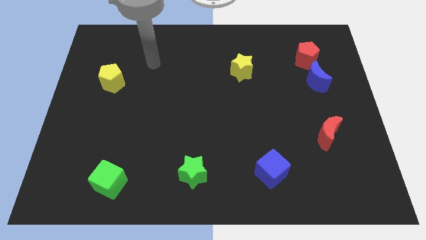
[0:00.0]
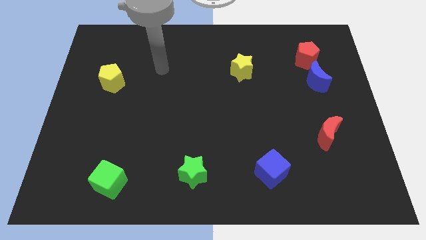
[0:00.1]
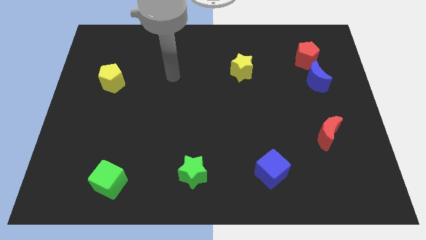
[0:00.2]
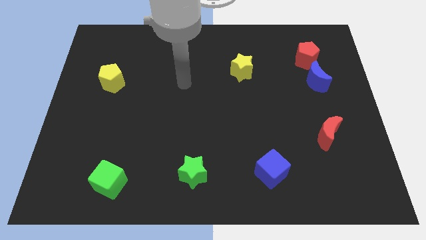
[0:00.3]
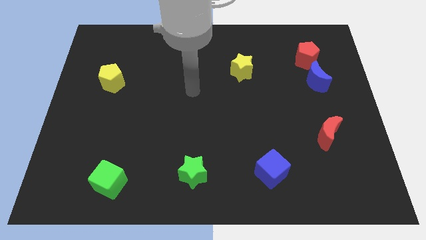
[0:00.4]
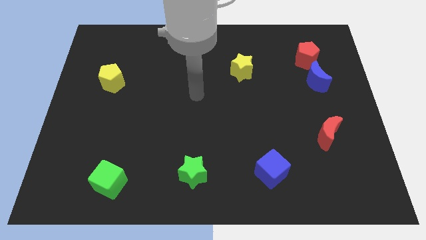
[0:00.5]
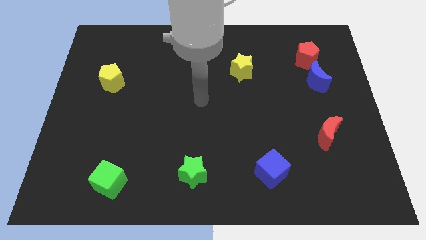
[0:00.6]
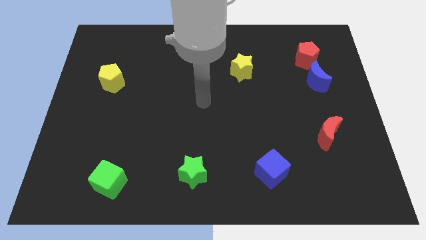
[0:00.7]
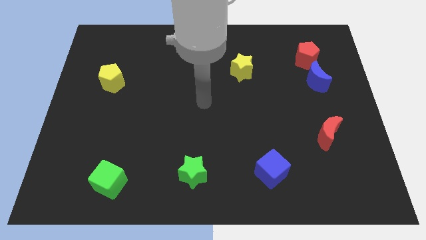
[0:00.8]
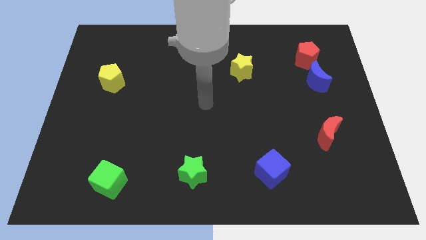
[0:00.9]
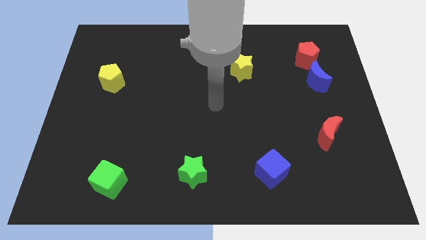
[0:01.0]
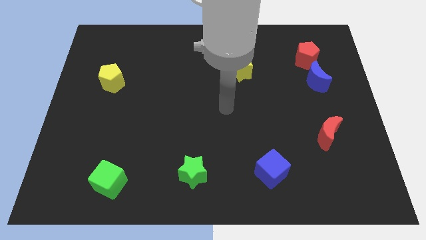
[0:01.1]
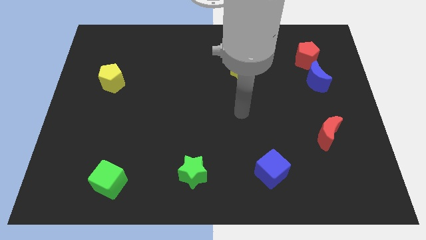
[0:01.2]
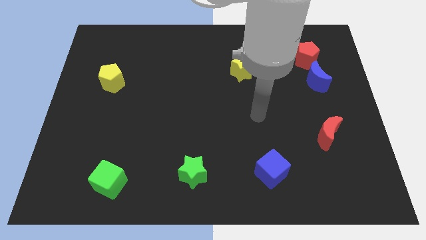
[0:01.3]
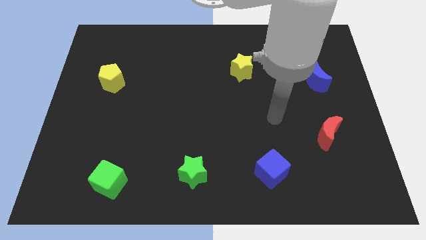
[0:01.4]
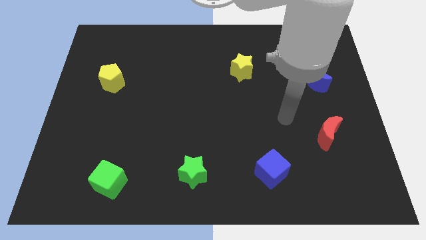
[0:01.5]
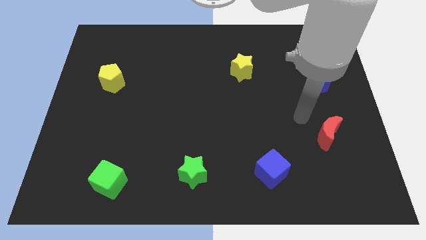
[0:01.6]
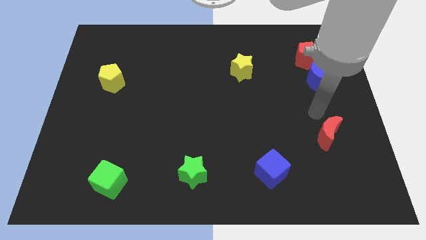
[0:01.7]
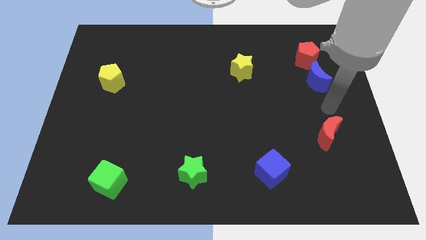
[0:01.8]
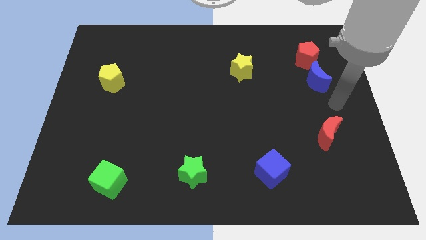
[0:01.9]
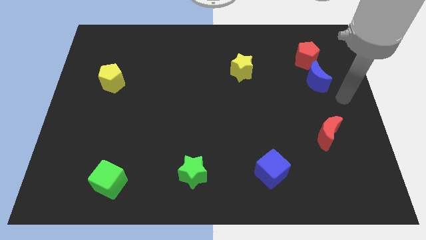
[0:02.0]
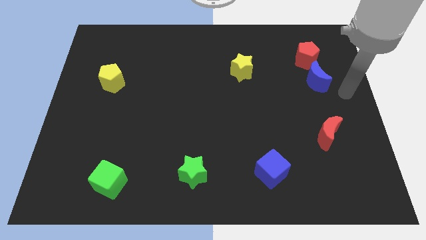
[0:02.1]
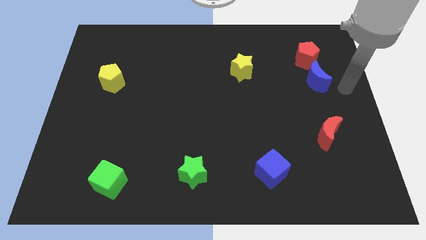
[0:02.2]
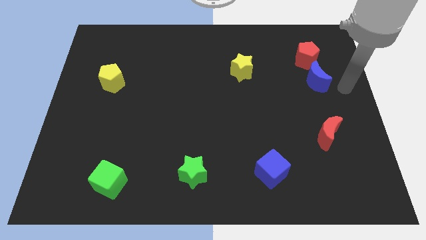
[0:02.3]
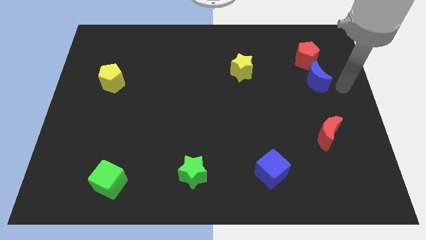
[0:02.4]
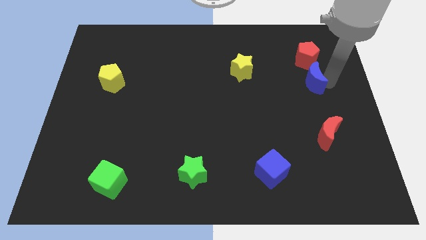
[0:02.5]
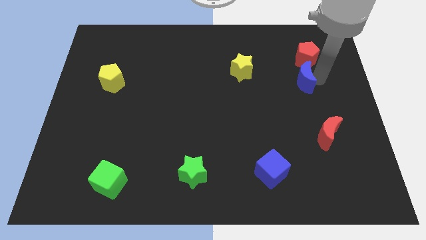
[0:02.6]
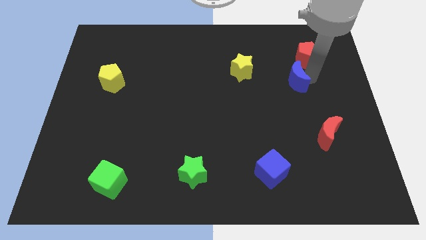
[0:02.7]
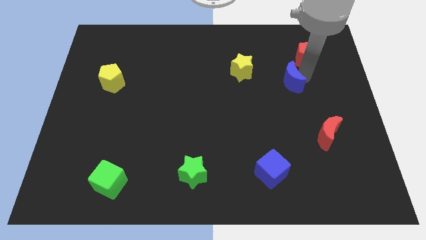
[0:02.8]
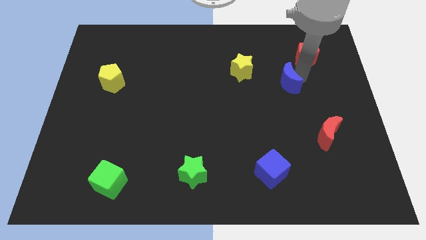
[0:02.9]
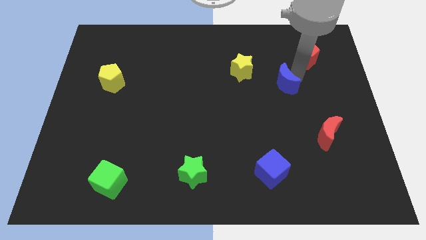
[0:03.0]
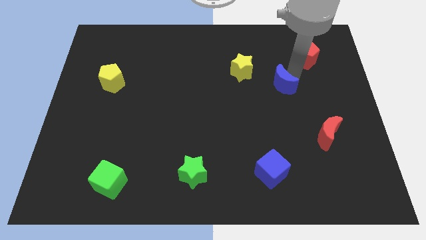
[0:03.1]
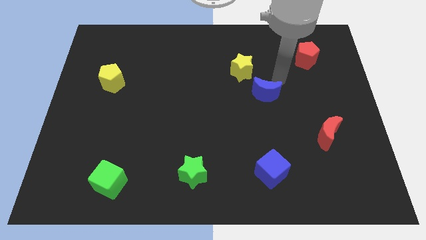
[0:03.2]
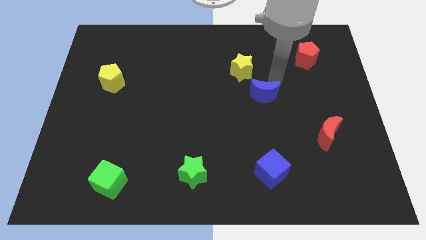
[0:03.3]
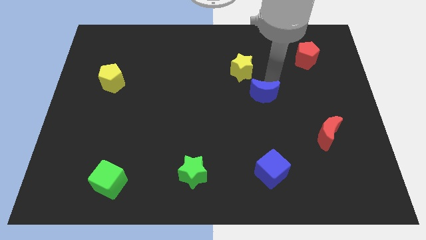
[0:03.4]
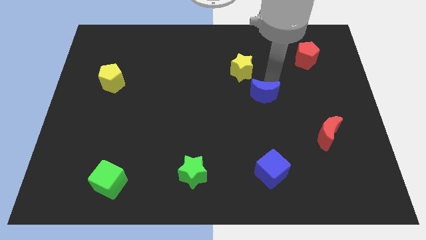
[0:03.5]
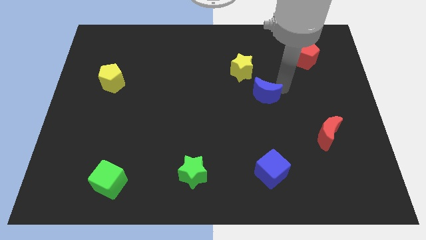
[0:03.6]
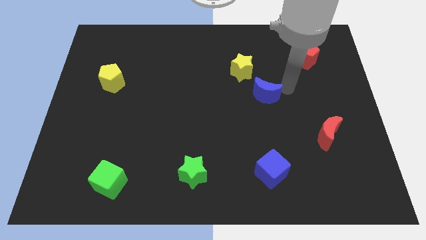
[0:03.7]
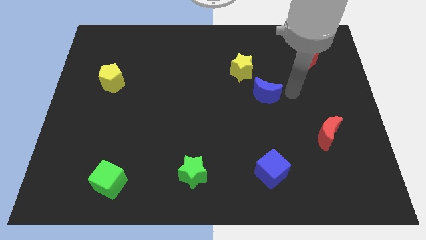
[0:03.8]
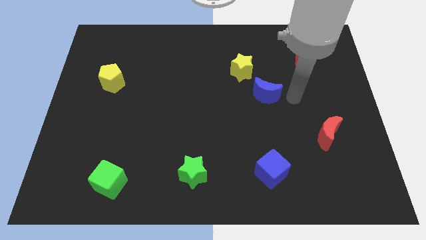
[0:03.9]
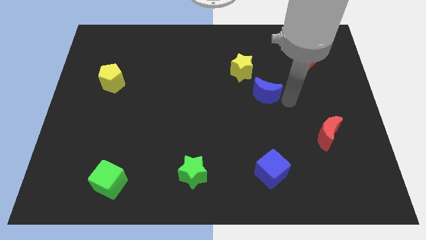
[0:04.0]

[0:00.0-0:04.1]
place blue moon to the bottom right of yellow star

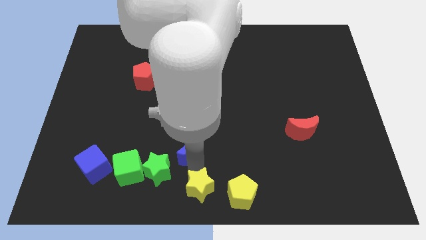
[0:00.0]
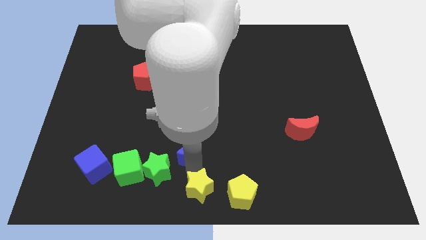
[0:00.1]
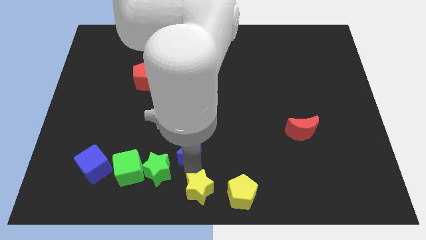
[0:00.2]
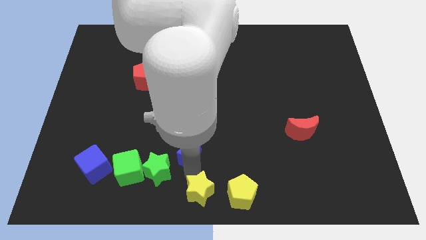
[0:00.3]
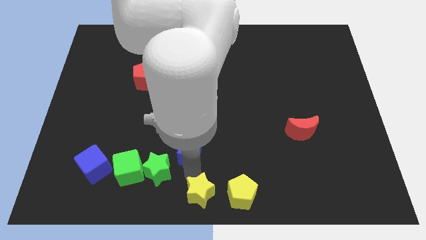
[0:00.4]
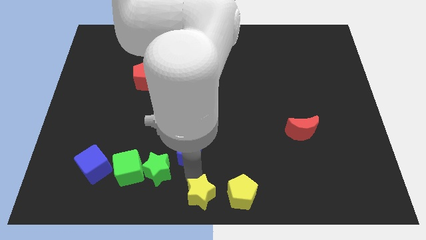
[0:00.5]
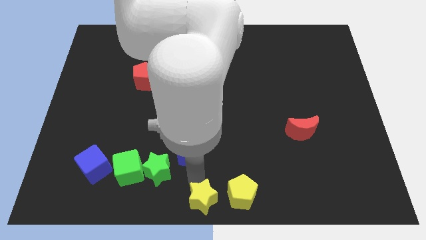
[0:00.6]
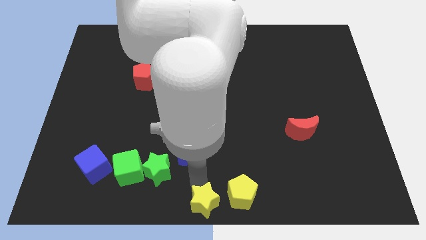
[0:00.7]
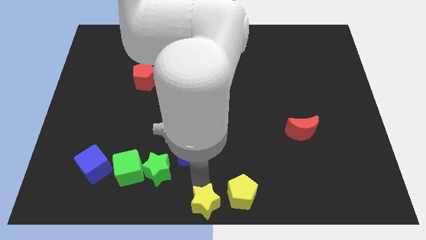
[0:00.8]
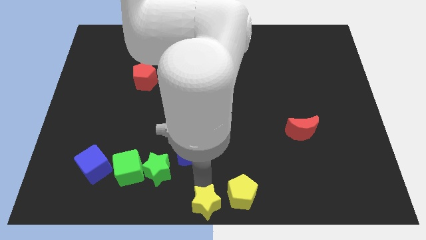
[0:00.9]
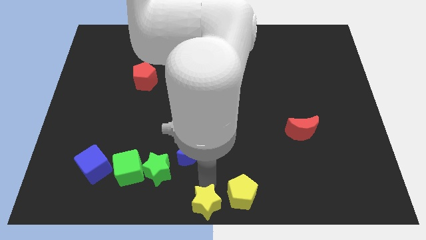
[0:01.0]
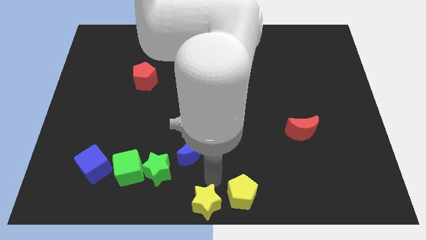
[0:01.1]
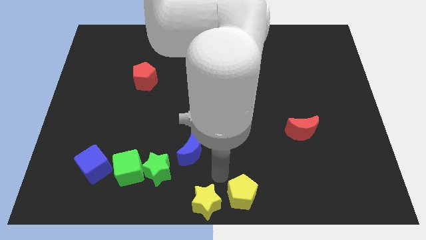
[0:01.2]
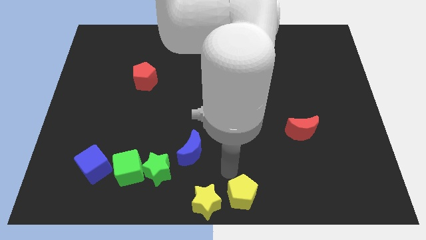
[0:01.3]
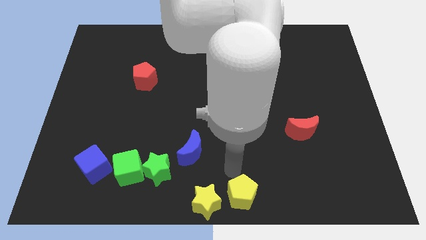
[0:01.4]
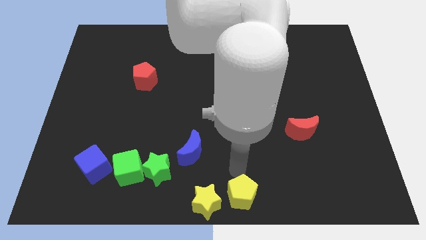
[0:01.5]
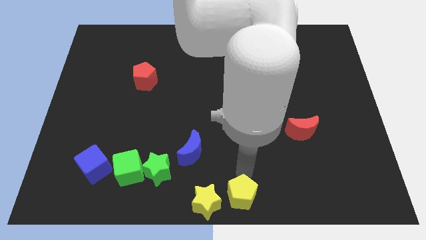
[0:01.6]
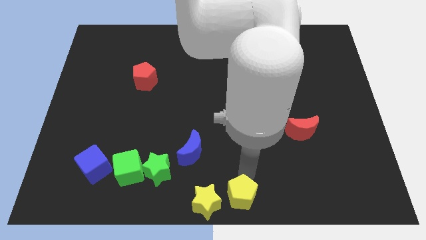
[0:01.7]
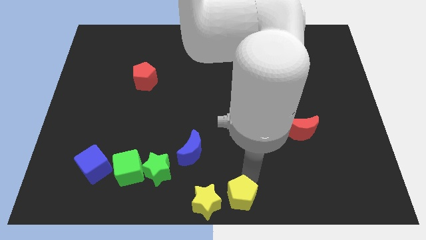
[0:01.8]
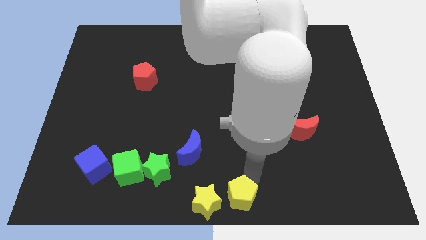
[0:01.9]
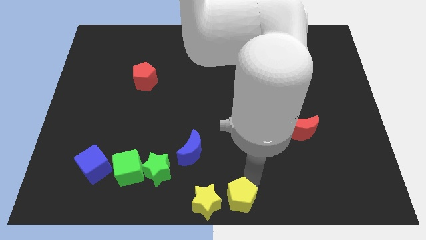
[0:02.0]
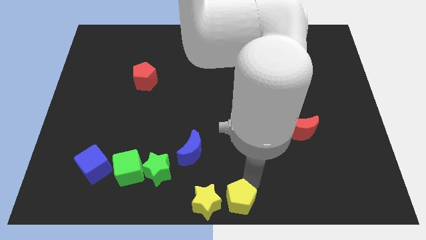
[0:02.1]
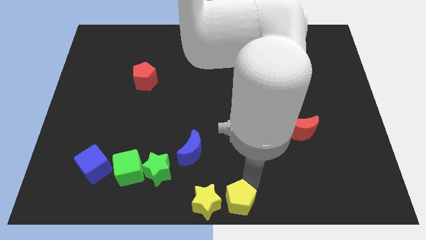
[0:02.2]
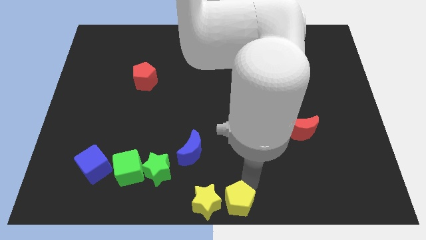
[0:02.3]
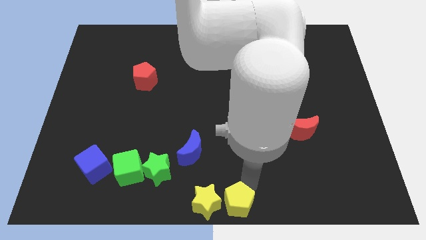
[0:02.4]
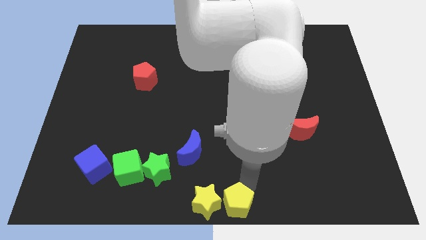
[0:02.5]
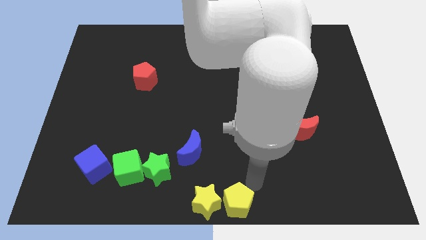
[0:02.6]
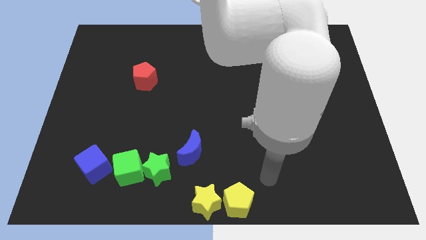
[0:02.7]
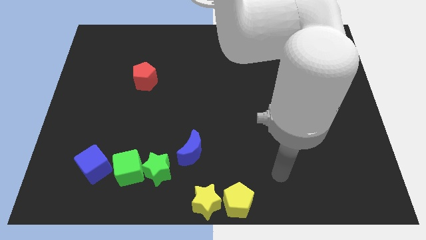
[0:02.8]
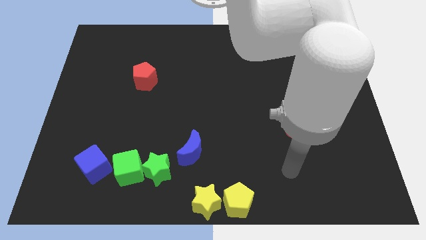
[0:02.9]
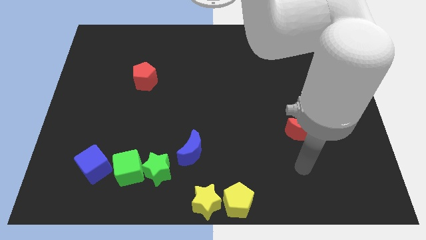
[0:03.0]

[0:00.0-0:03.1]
push the yellow star and yellow pentagon to the bottom center of the board

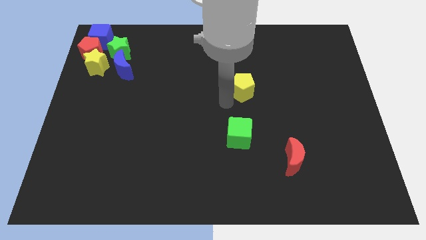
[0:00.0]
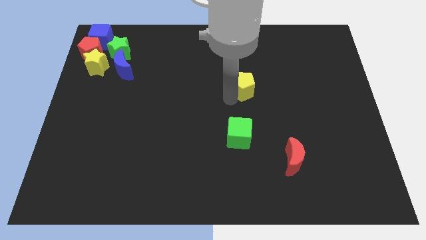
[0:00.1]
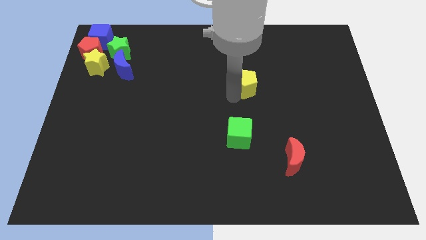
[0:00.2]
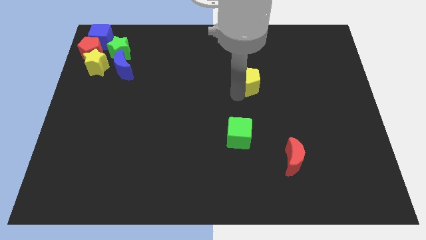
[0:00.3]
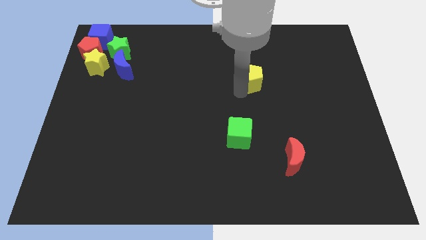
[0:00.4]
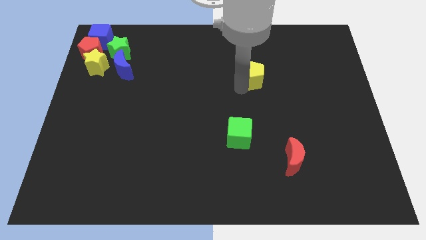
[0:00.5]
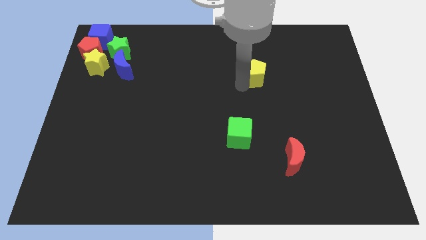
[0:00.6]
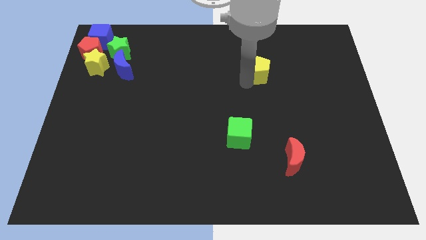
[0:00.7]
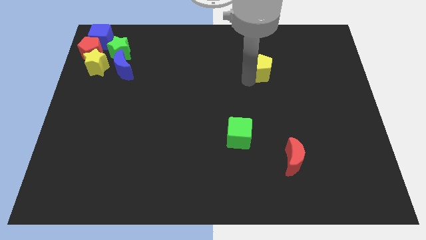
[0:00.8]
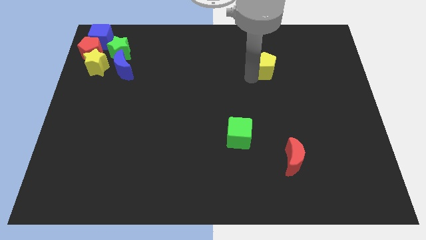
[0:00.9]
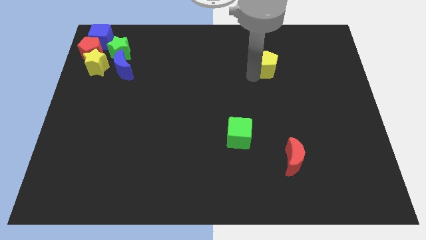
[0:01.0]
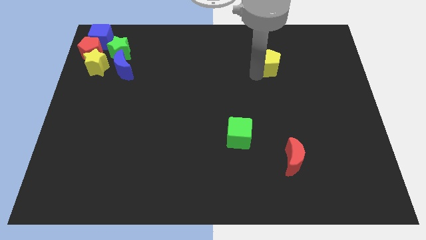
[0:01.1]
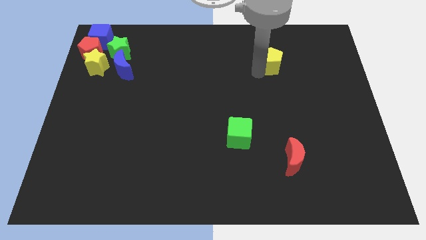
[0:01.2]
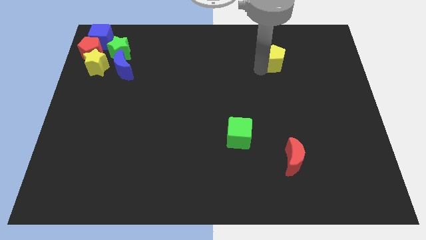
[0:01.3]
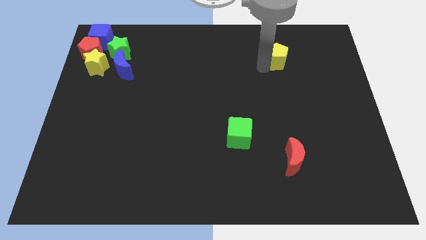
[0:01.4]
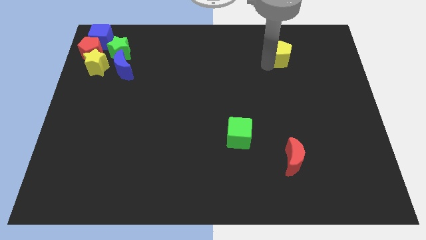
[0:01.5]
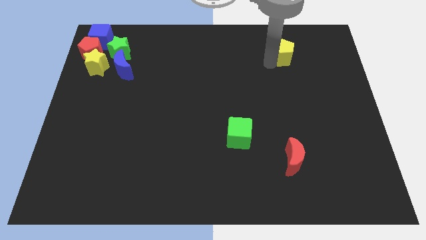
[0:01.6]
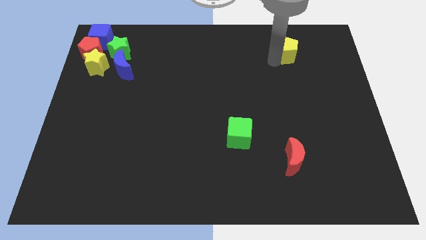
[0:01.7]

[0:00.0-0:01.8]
move the yellow pentagon to the top side of the board
